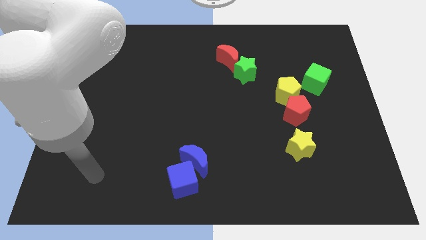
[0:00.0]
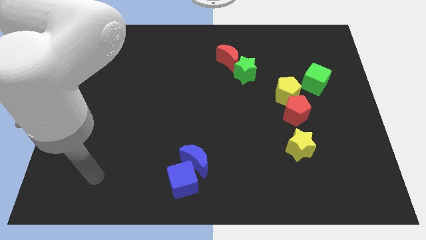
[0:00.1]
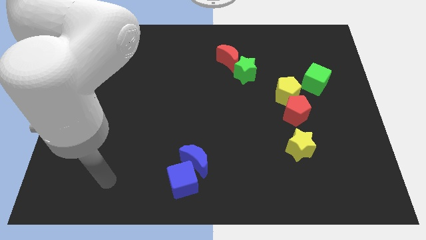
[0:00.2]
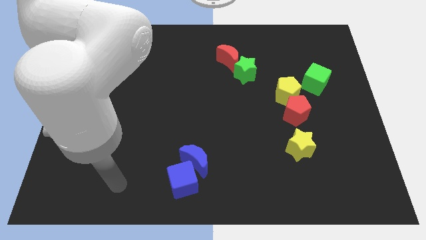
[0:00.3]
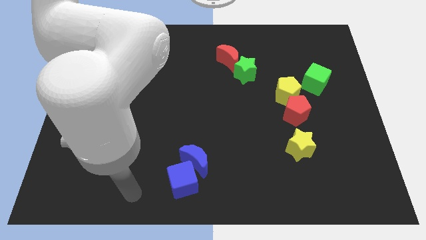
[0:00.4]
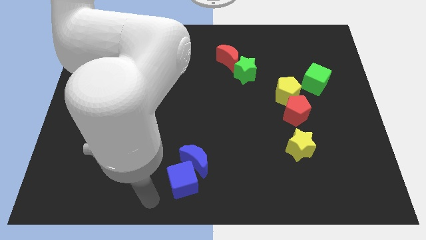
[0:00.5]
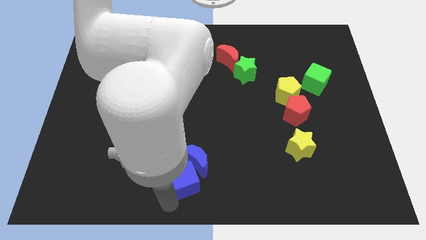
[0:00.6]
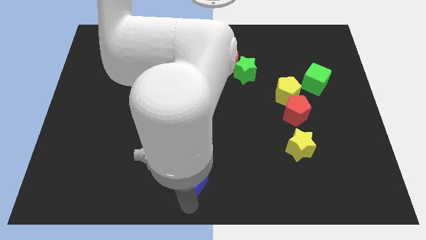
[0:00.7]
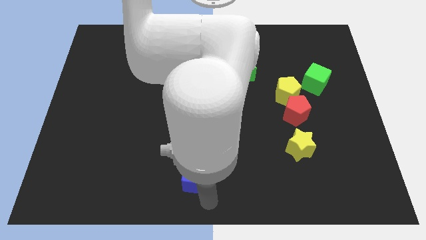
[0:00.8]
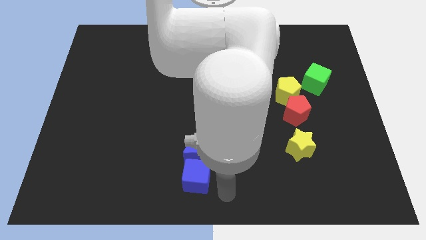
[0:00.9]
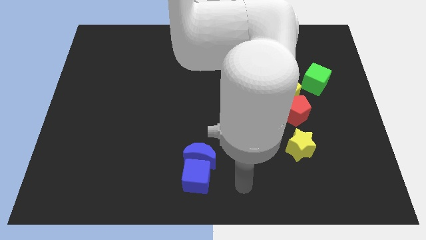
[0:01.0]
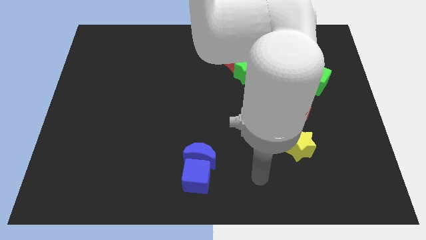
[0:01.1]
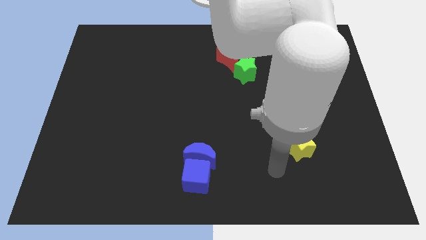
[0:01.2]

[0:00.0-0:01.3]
touch the blue block with the arm

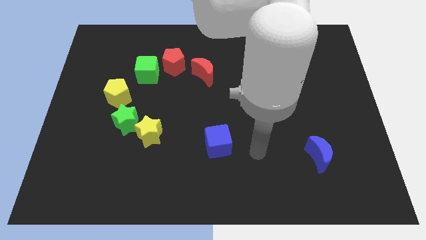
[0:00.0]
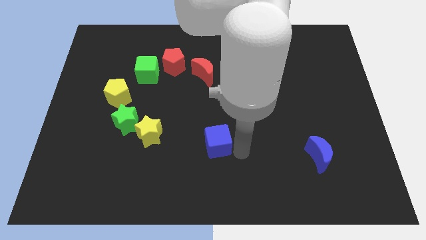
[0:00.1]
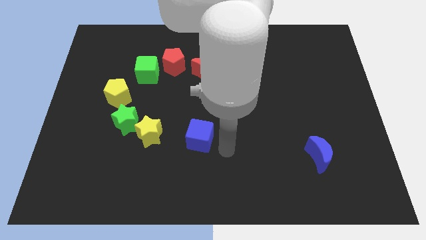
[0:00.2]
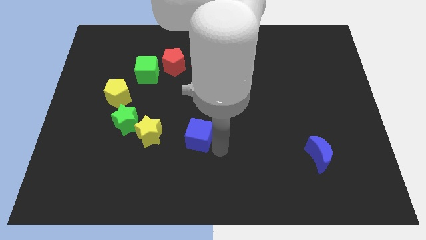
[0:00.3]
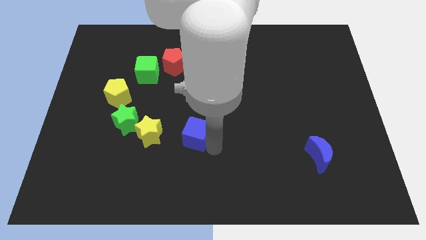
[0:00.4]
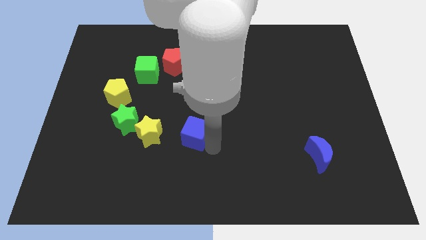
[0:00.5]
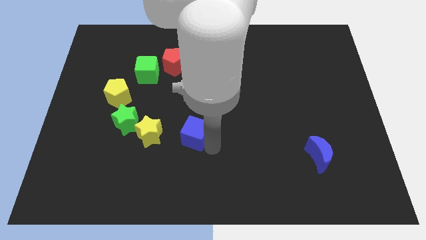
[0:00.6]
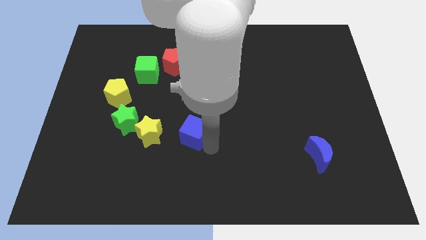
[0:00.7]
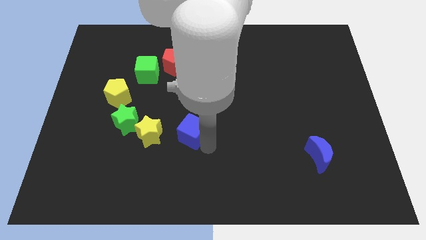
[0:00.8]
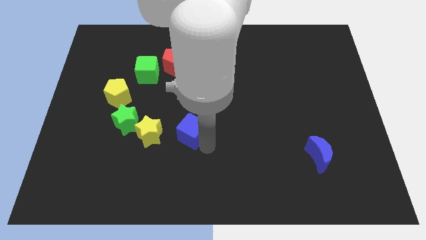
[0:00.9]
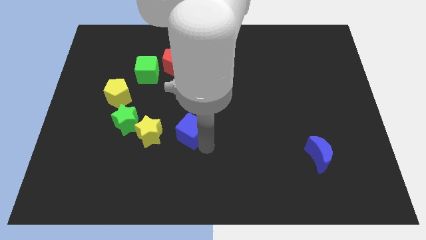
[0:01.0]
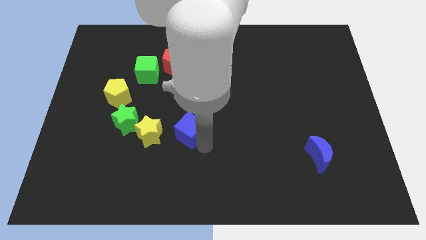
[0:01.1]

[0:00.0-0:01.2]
move the blue cube vertically below the red pentagon

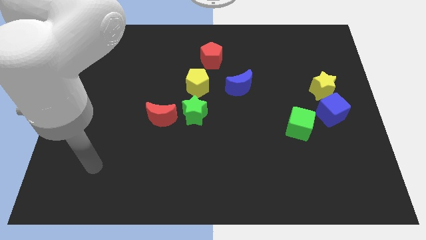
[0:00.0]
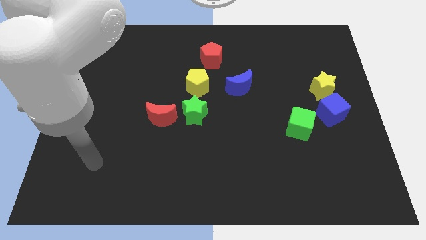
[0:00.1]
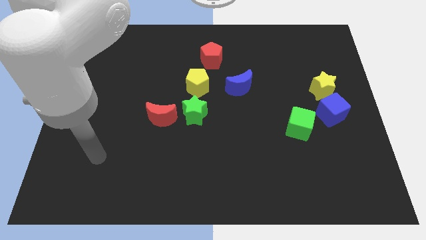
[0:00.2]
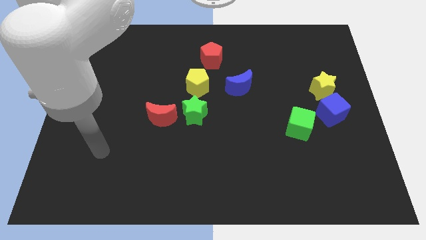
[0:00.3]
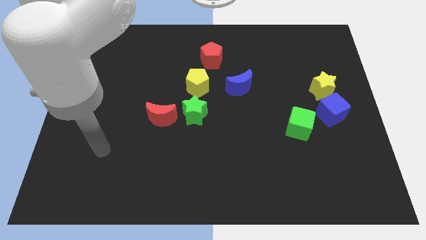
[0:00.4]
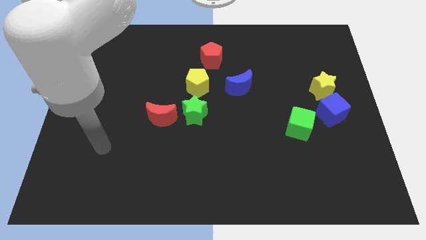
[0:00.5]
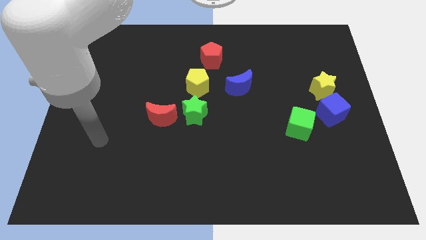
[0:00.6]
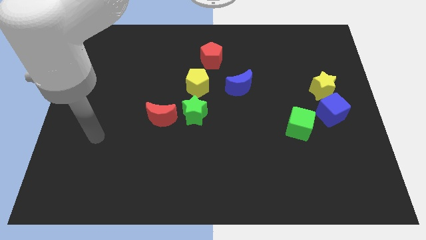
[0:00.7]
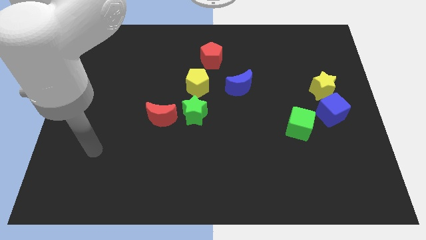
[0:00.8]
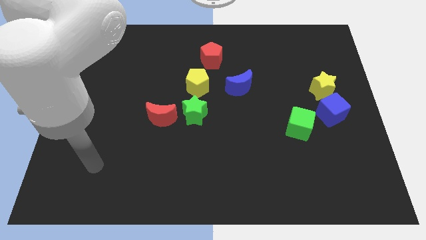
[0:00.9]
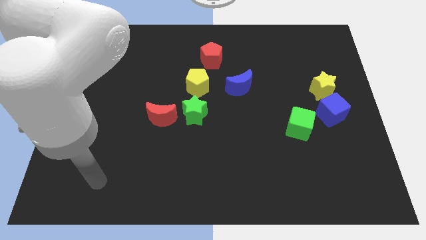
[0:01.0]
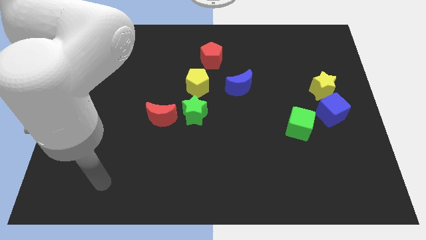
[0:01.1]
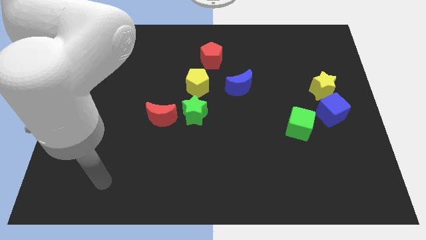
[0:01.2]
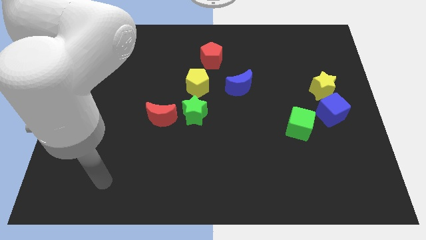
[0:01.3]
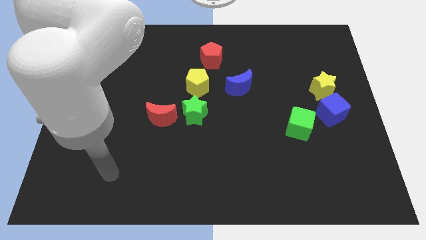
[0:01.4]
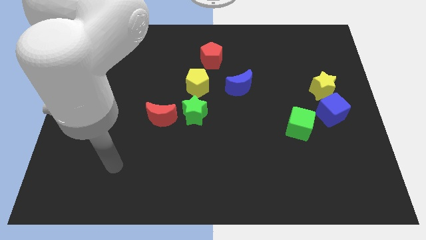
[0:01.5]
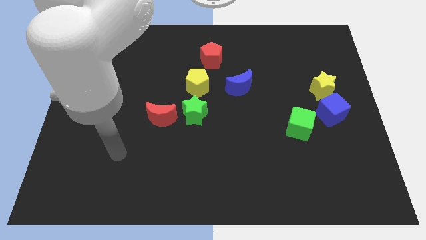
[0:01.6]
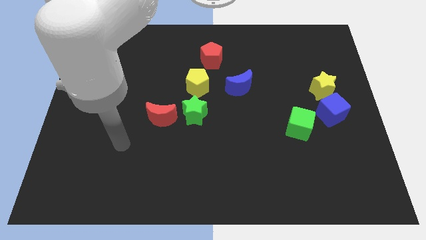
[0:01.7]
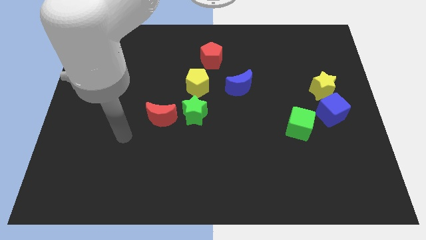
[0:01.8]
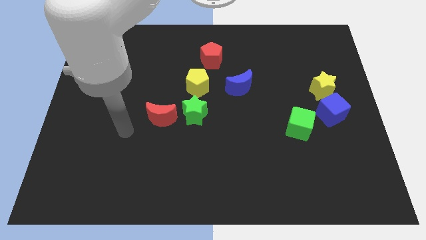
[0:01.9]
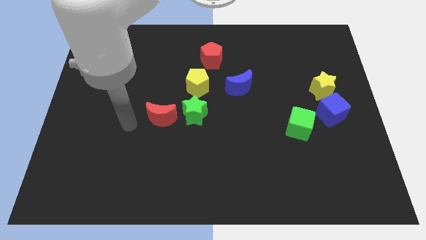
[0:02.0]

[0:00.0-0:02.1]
move your arm to the left side of the red moon

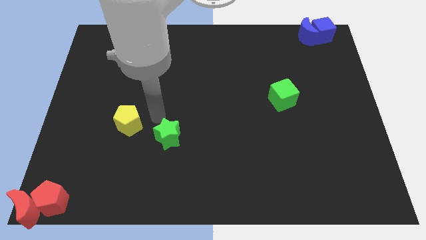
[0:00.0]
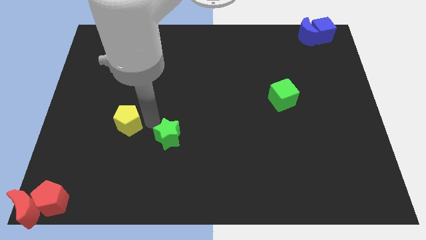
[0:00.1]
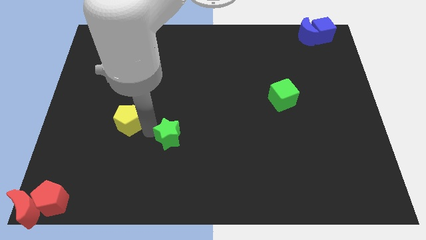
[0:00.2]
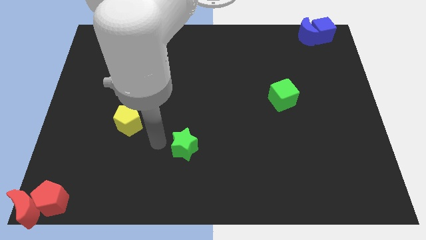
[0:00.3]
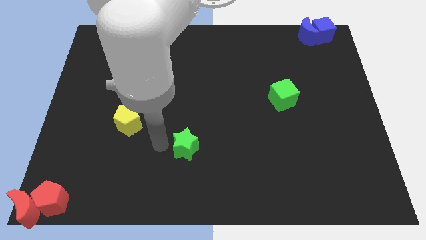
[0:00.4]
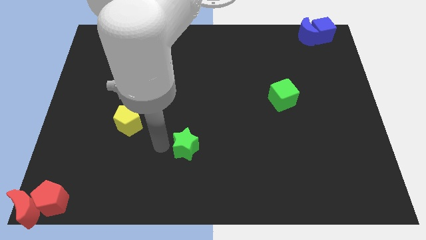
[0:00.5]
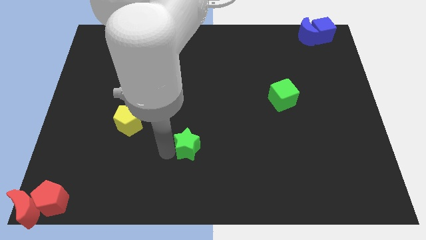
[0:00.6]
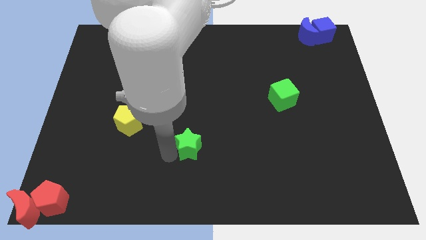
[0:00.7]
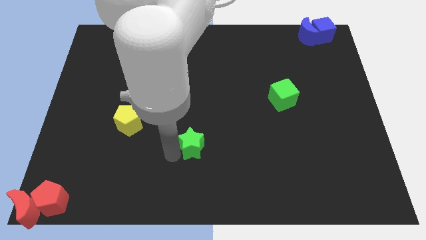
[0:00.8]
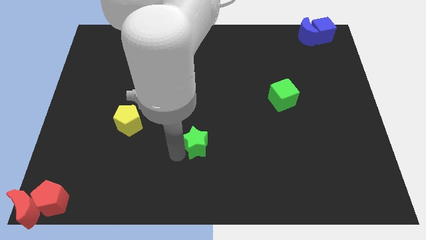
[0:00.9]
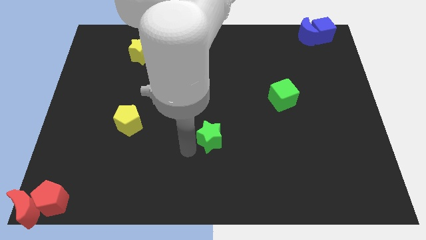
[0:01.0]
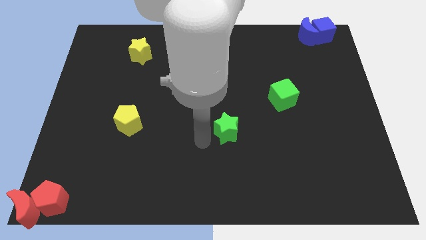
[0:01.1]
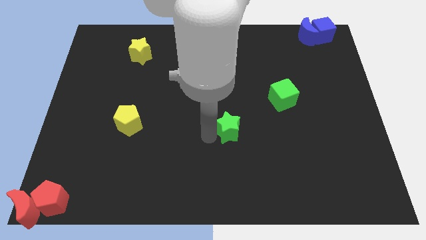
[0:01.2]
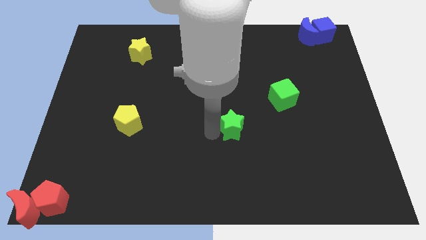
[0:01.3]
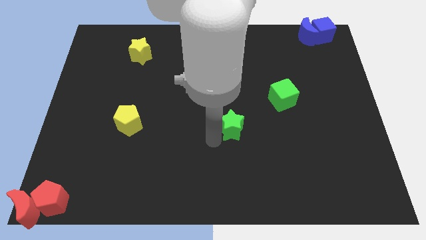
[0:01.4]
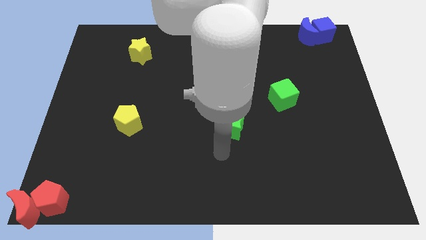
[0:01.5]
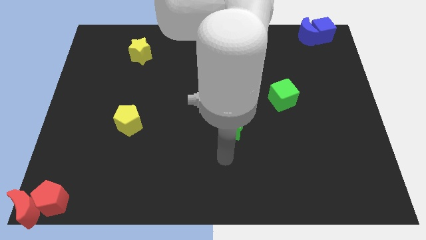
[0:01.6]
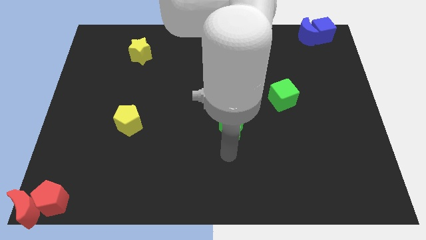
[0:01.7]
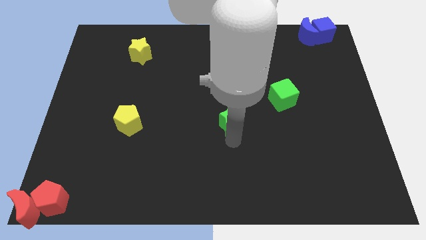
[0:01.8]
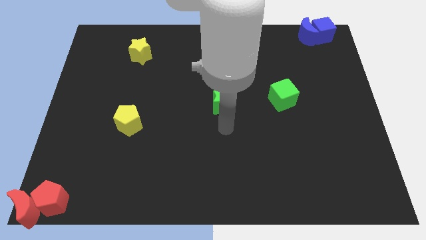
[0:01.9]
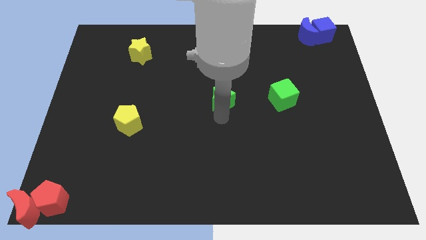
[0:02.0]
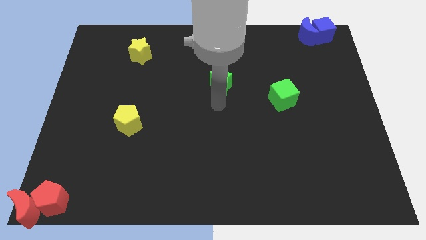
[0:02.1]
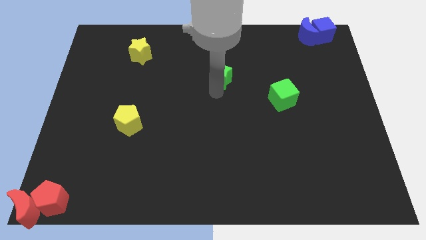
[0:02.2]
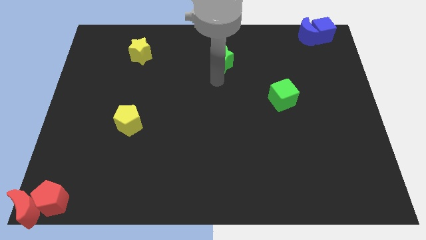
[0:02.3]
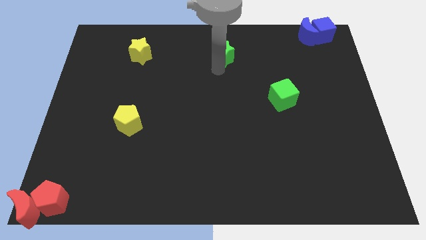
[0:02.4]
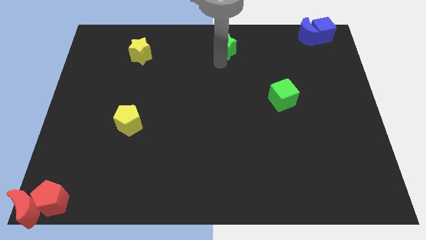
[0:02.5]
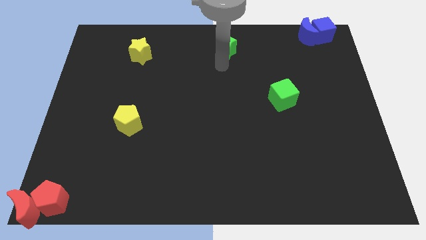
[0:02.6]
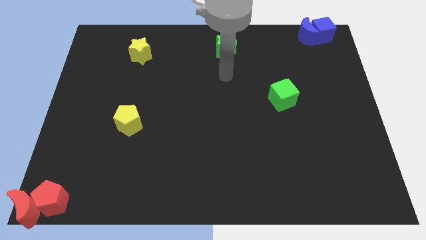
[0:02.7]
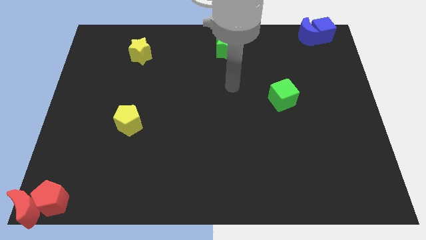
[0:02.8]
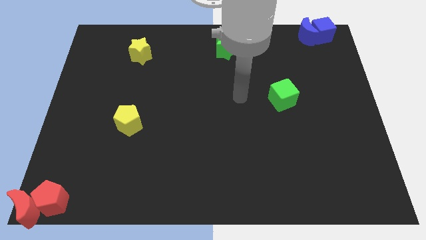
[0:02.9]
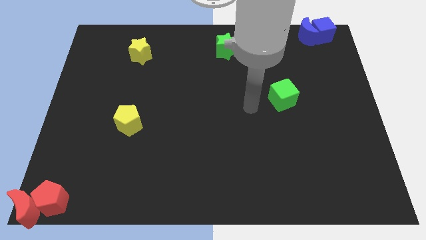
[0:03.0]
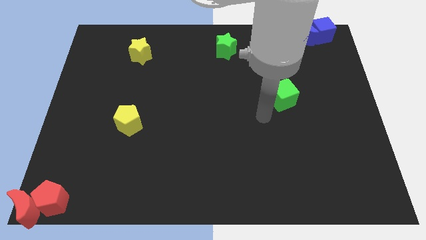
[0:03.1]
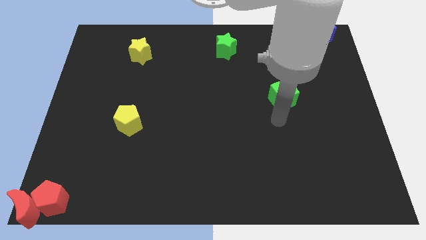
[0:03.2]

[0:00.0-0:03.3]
place the green star to the right of the yellow star

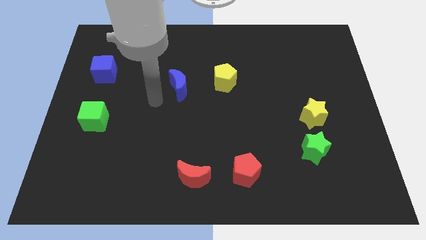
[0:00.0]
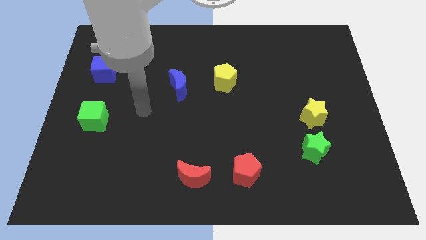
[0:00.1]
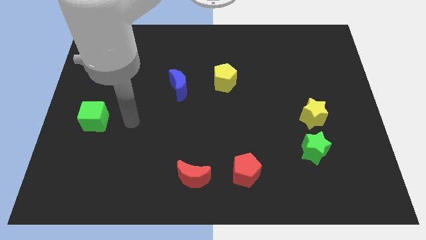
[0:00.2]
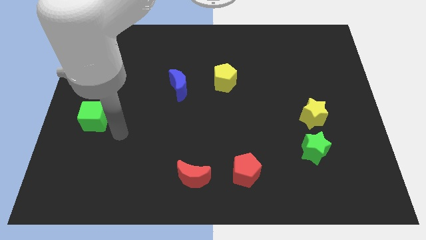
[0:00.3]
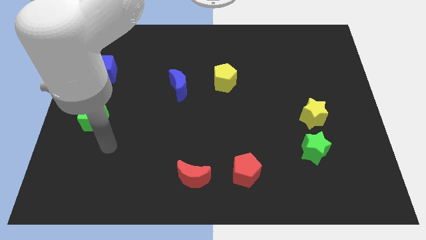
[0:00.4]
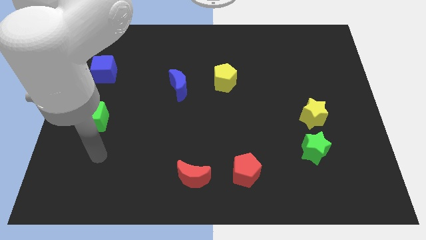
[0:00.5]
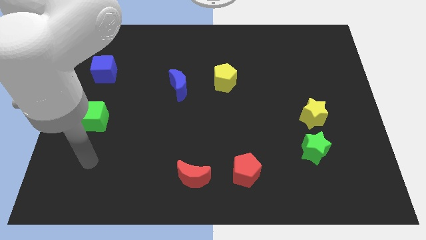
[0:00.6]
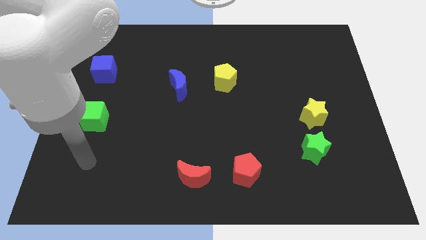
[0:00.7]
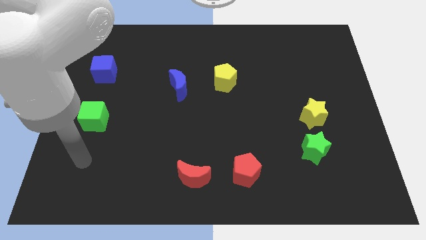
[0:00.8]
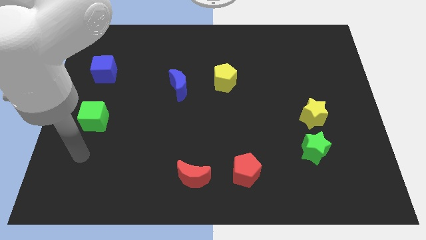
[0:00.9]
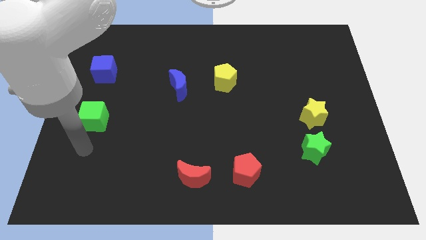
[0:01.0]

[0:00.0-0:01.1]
place your arm below the green cube

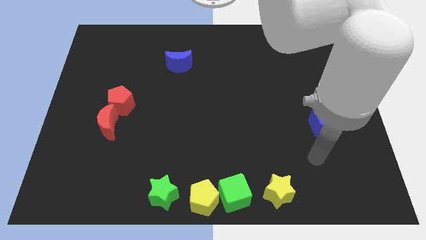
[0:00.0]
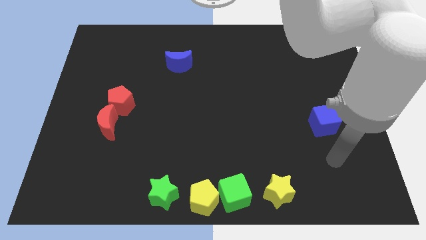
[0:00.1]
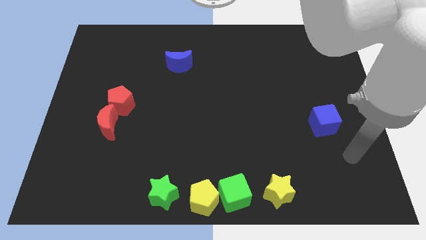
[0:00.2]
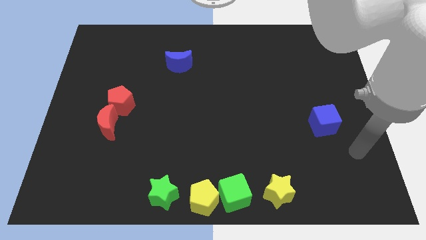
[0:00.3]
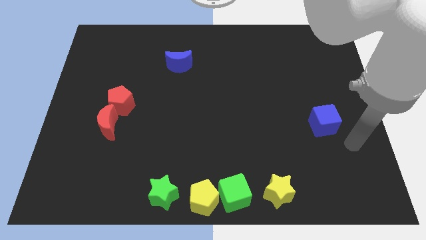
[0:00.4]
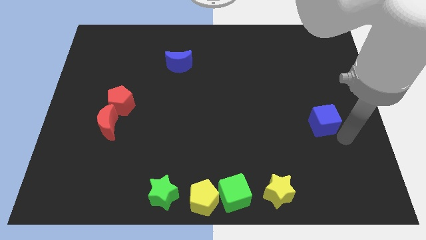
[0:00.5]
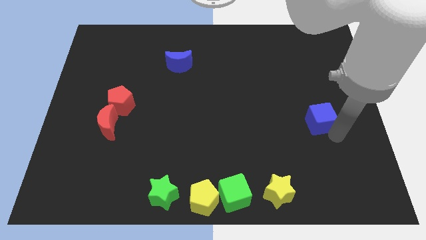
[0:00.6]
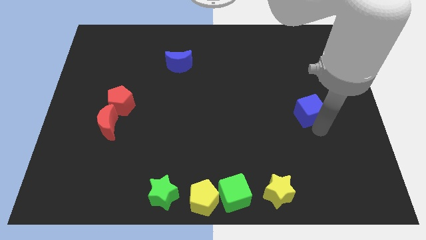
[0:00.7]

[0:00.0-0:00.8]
move the arm into the blue cube
